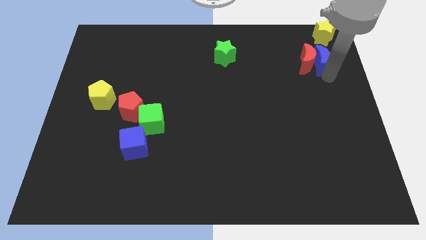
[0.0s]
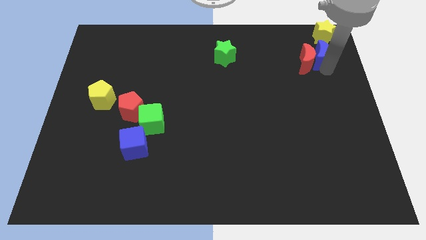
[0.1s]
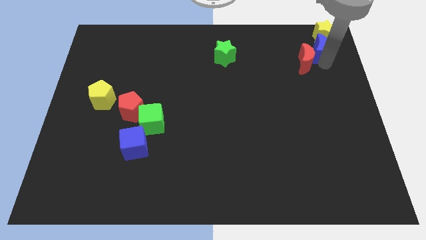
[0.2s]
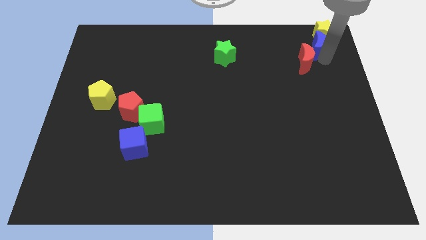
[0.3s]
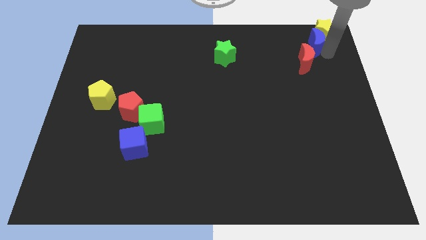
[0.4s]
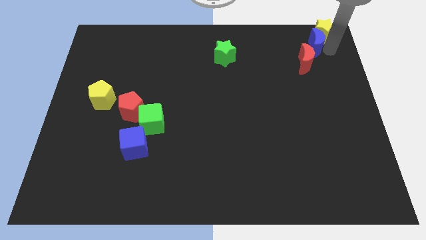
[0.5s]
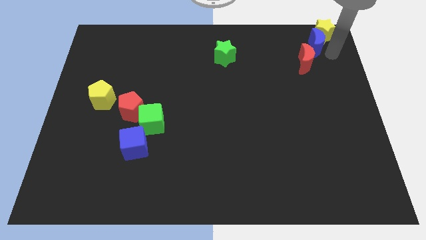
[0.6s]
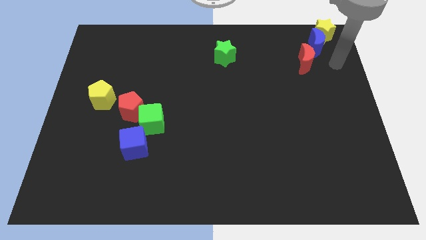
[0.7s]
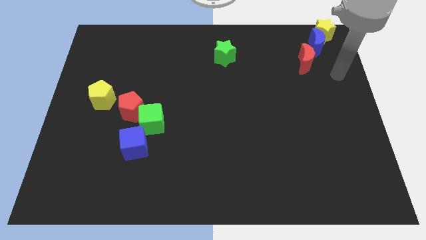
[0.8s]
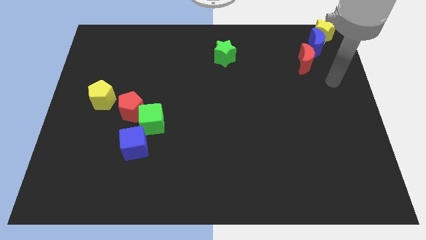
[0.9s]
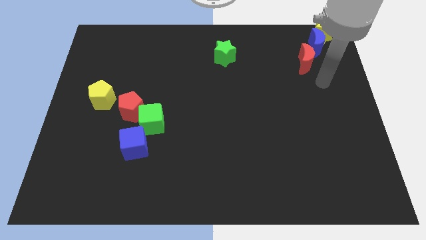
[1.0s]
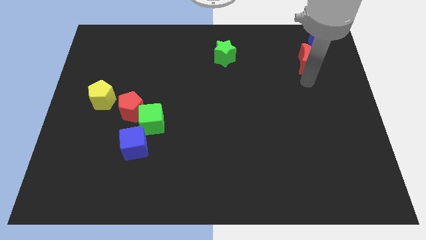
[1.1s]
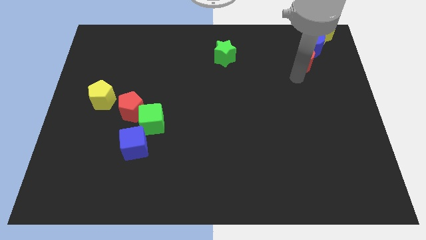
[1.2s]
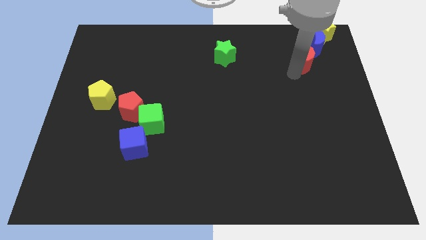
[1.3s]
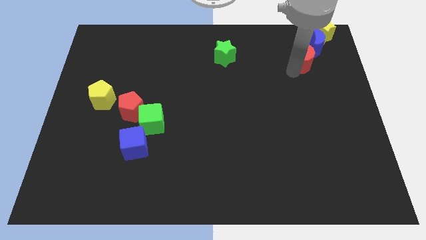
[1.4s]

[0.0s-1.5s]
place the blue moon between red moon and yellow star

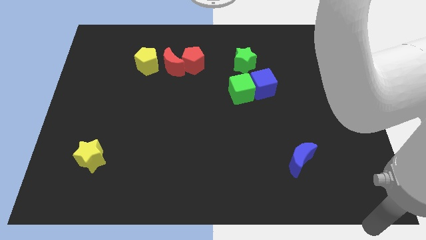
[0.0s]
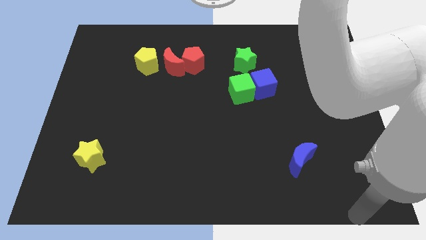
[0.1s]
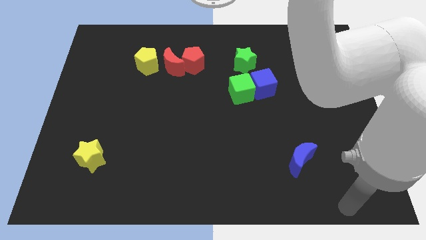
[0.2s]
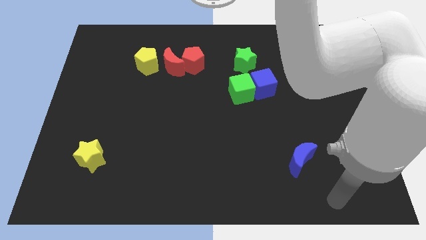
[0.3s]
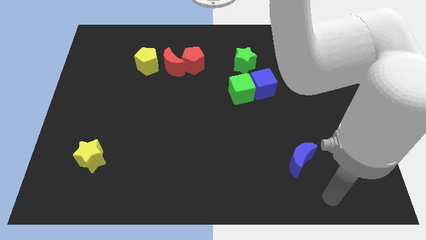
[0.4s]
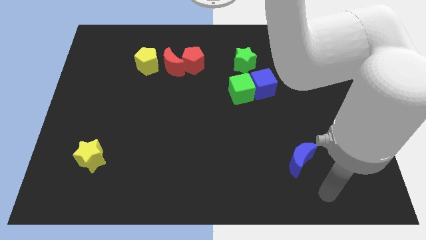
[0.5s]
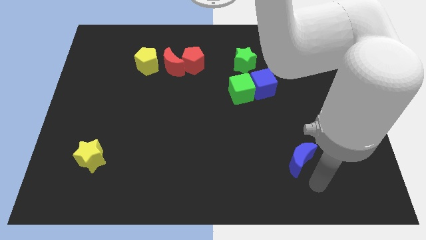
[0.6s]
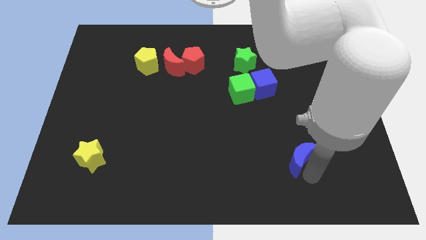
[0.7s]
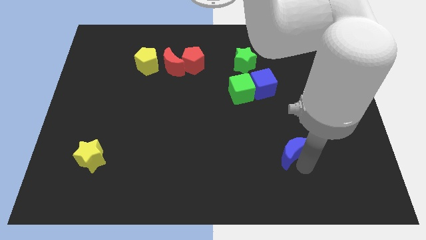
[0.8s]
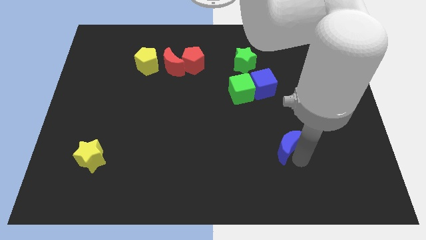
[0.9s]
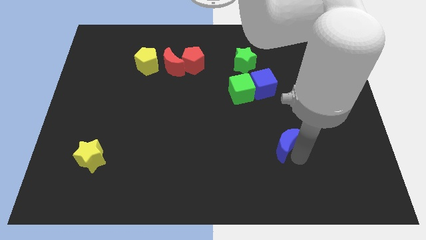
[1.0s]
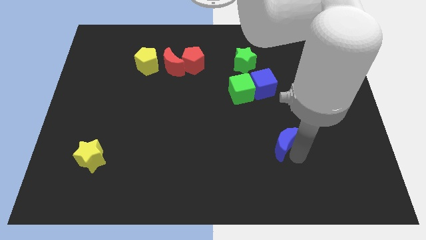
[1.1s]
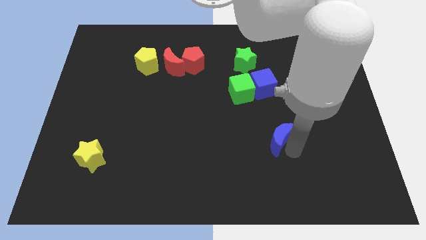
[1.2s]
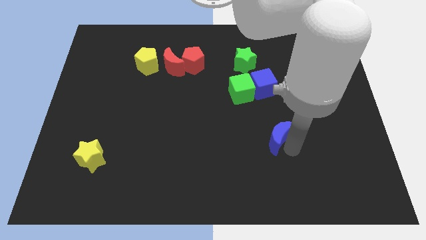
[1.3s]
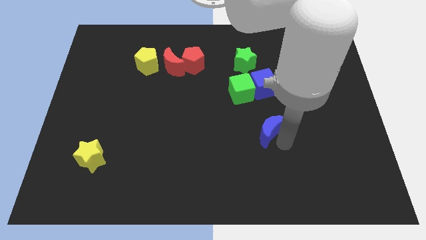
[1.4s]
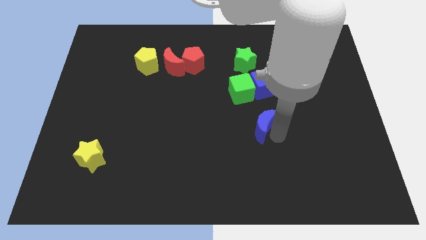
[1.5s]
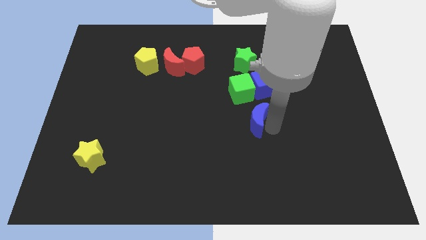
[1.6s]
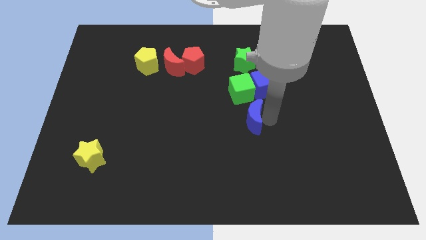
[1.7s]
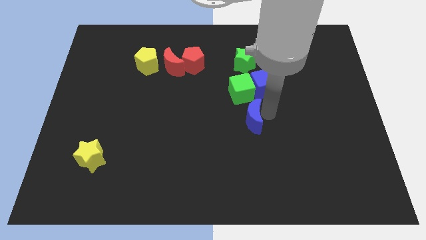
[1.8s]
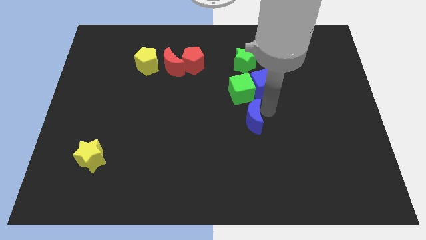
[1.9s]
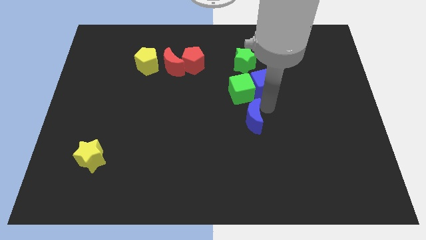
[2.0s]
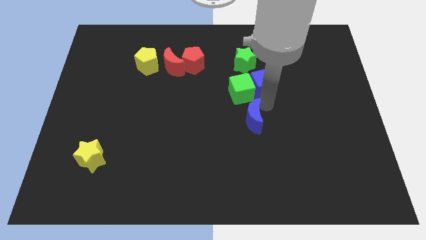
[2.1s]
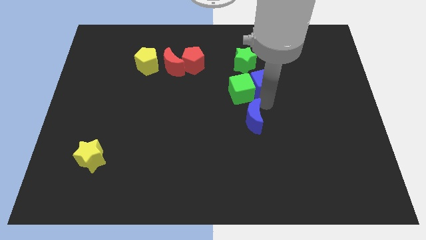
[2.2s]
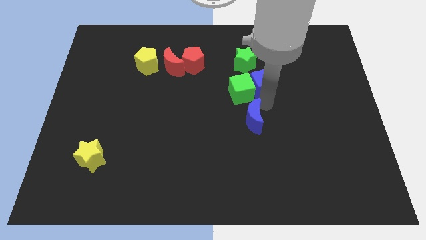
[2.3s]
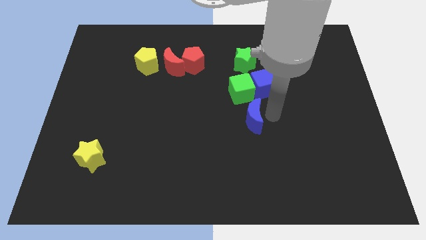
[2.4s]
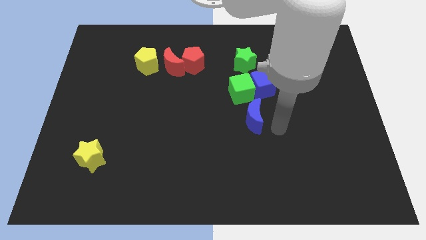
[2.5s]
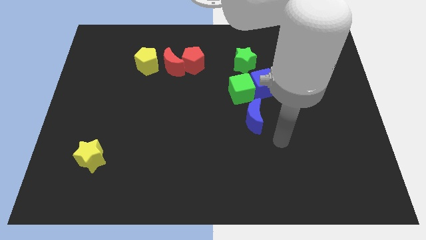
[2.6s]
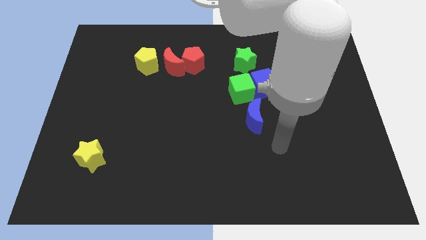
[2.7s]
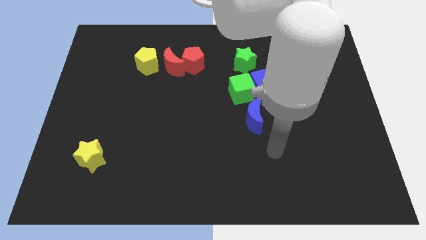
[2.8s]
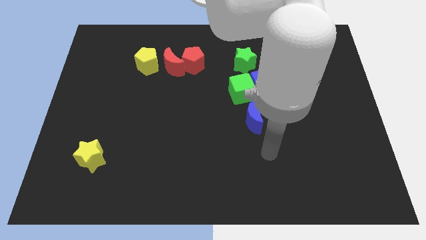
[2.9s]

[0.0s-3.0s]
move the blue moon to the bottom side of the green cube

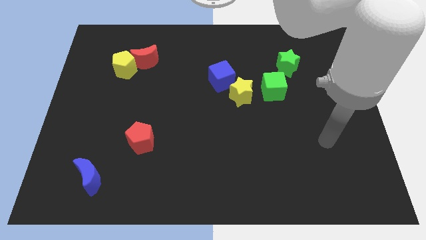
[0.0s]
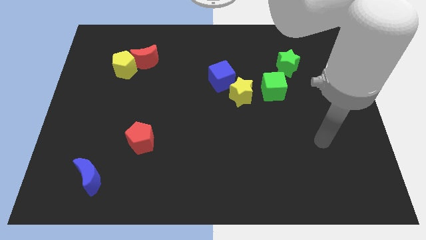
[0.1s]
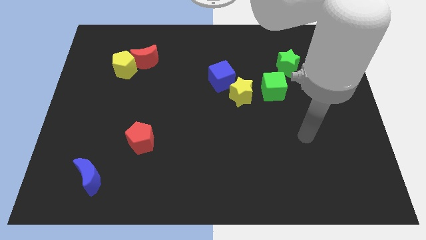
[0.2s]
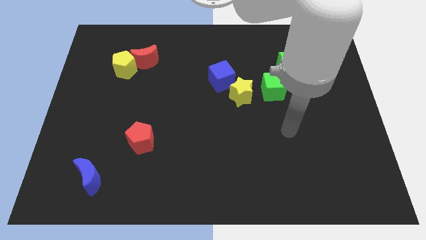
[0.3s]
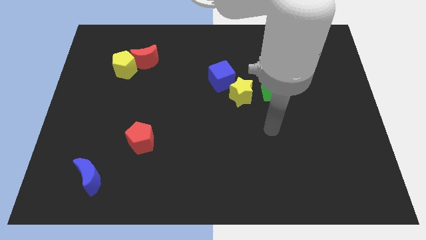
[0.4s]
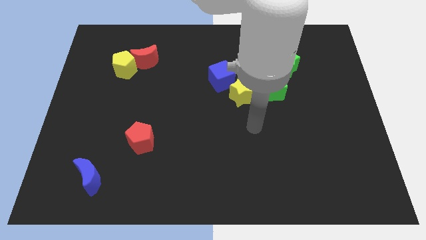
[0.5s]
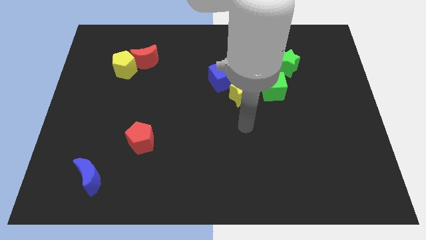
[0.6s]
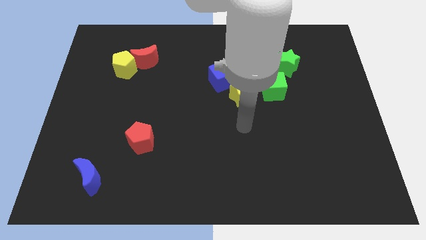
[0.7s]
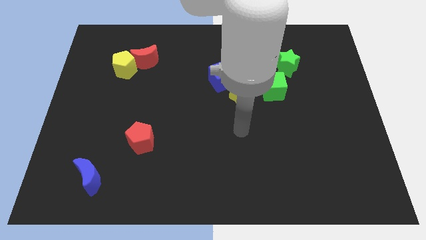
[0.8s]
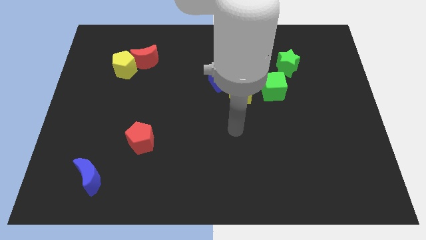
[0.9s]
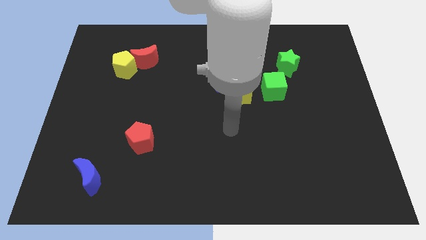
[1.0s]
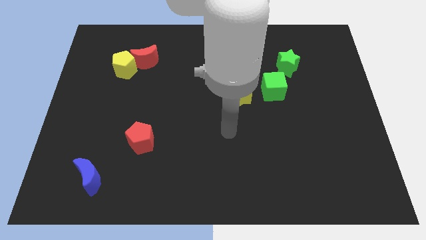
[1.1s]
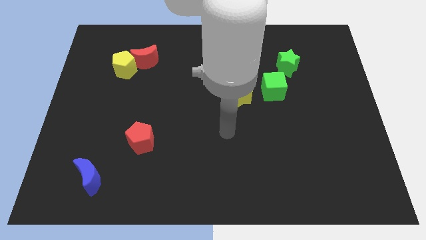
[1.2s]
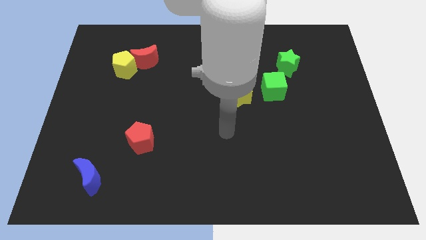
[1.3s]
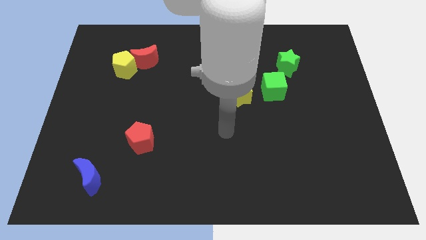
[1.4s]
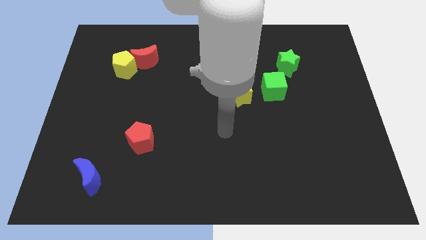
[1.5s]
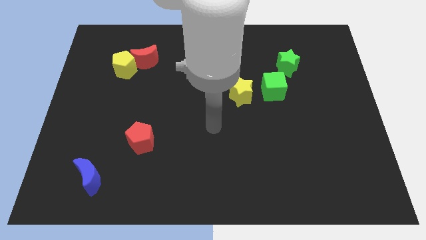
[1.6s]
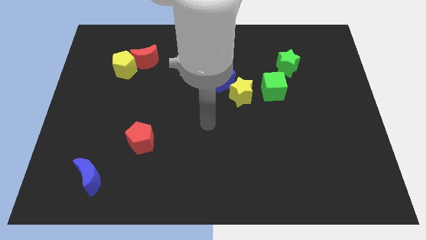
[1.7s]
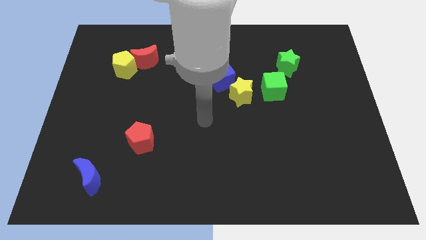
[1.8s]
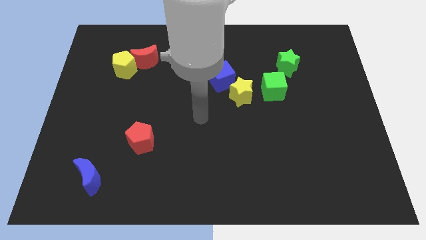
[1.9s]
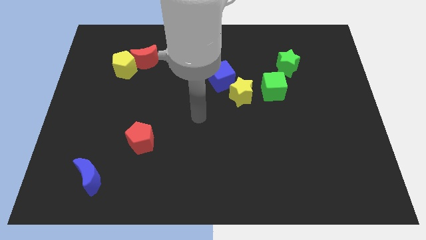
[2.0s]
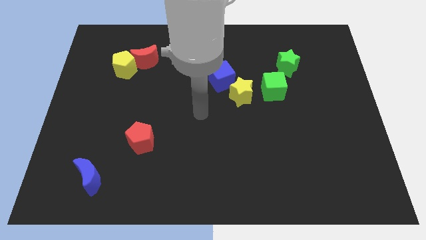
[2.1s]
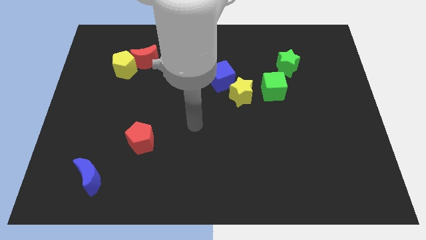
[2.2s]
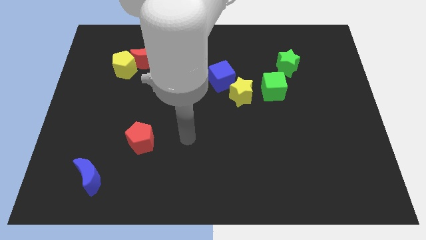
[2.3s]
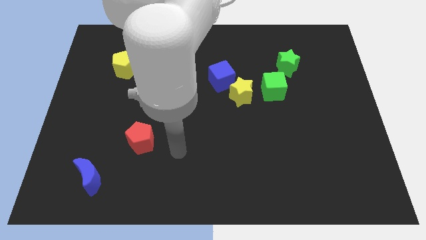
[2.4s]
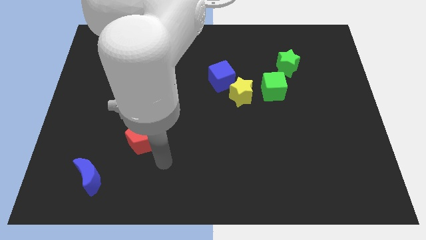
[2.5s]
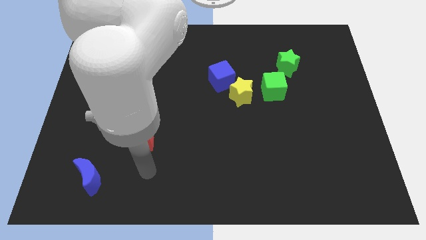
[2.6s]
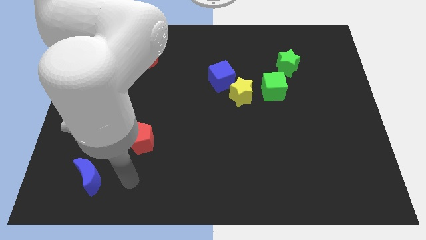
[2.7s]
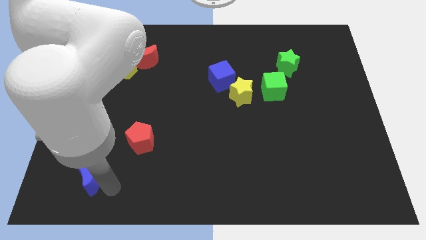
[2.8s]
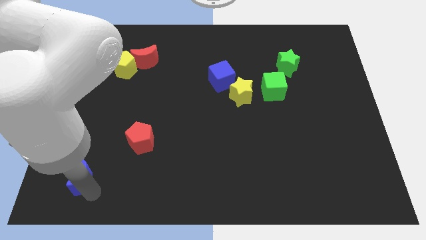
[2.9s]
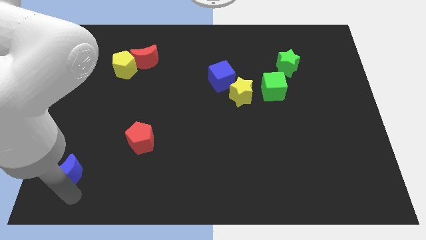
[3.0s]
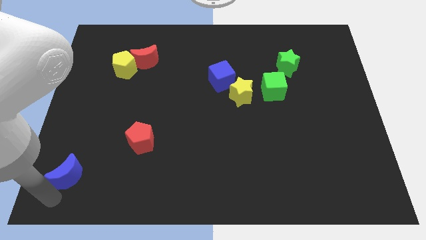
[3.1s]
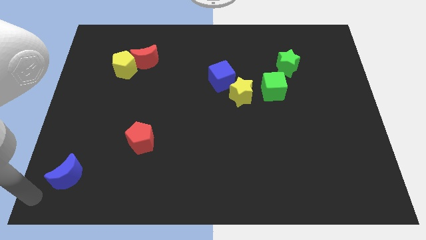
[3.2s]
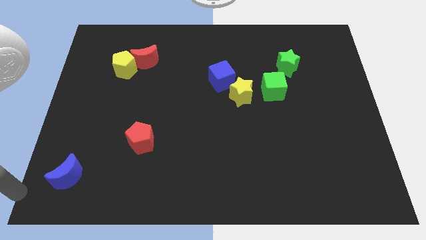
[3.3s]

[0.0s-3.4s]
put your hand at the bottom left corner

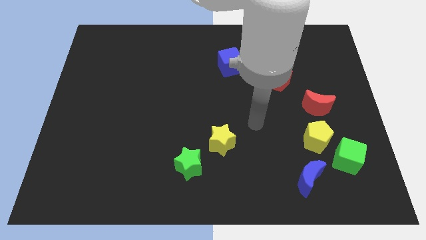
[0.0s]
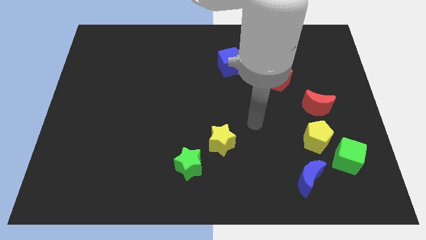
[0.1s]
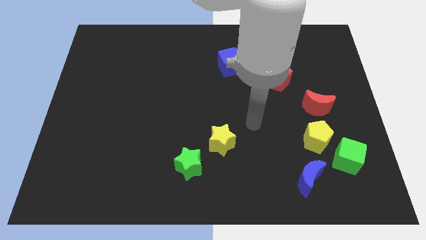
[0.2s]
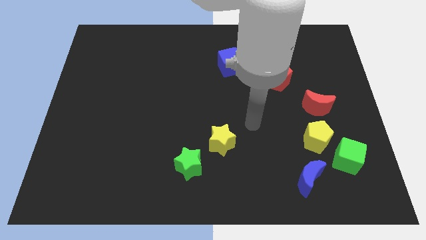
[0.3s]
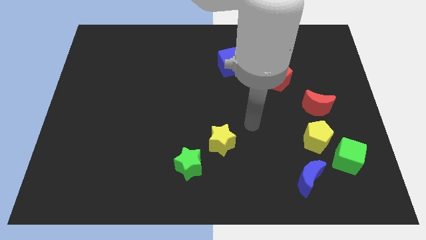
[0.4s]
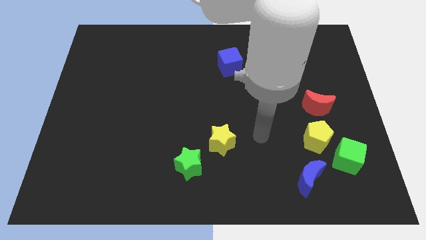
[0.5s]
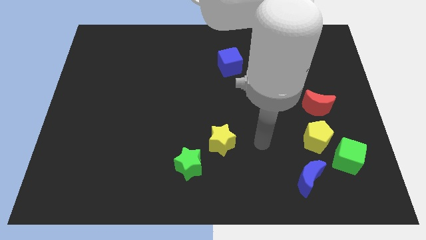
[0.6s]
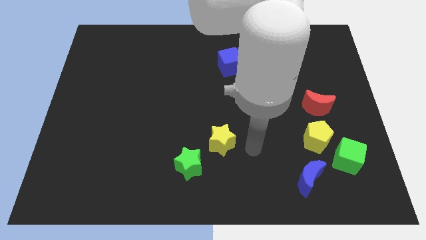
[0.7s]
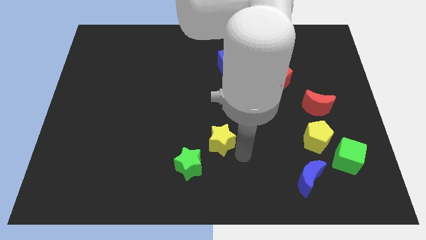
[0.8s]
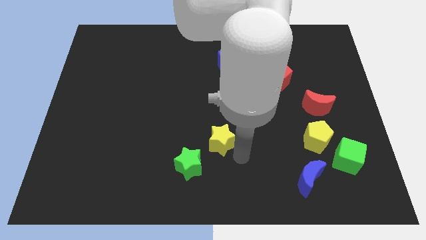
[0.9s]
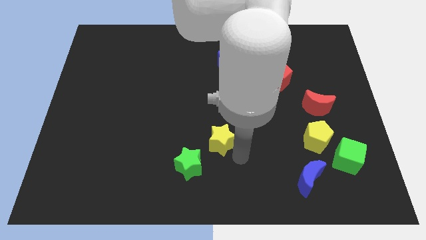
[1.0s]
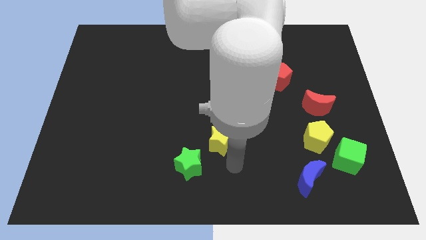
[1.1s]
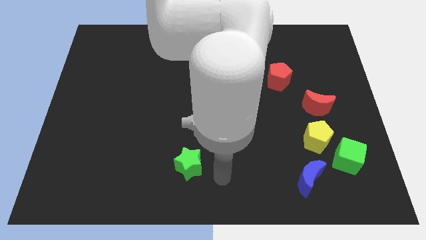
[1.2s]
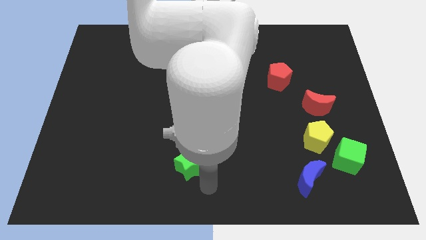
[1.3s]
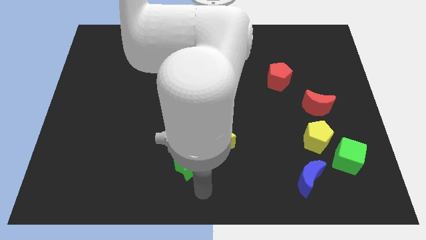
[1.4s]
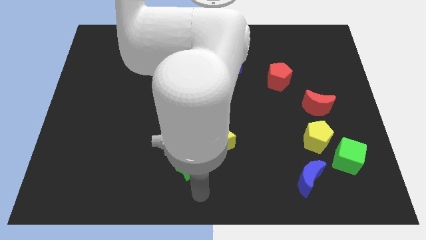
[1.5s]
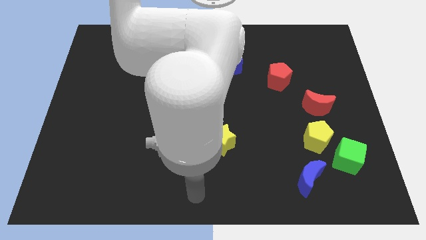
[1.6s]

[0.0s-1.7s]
point your arm at the bottom side of the green star
